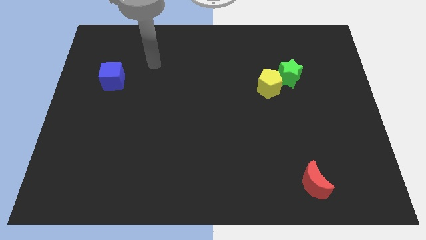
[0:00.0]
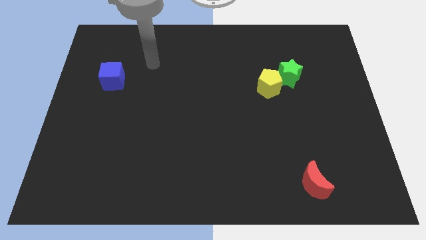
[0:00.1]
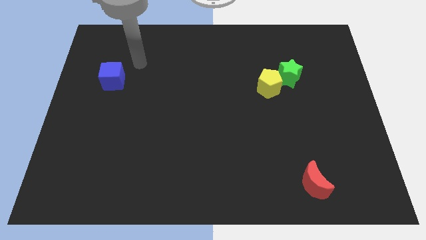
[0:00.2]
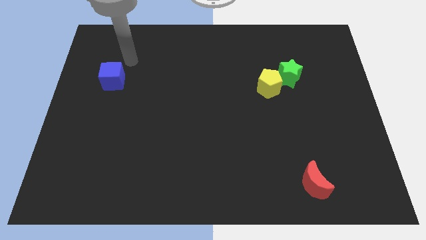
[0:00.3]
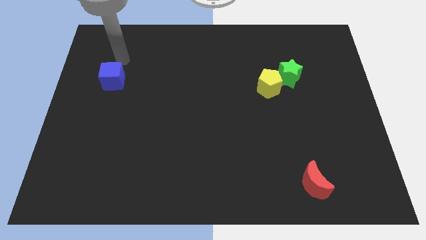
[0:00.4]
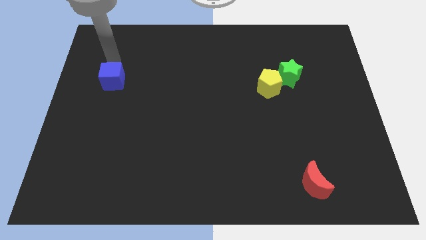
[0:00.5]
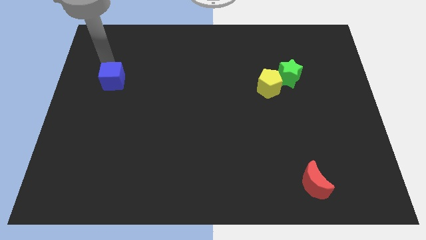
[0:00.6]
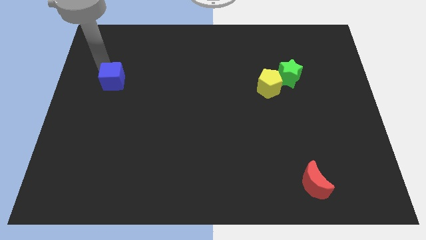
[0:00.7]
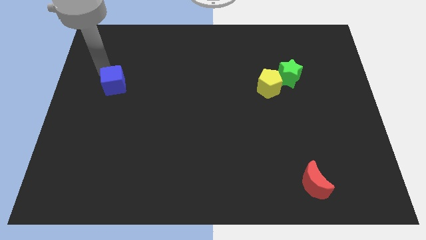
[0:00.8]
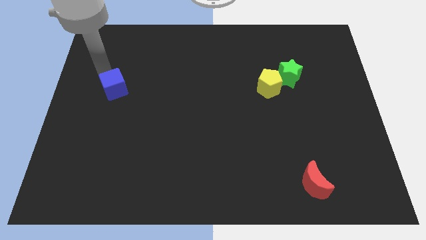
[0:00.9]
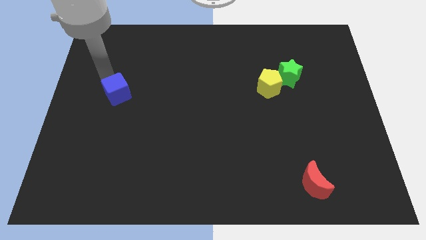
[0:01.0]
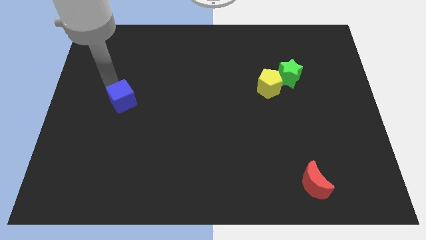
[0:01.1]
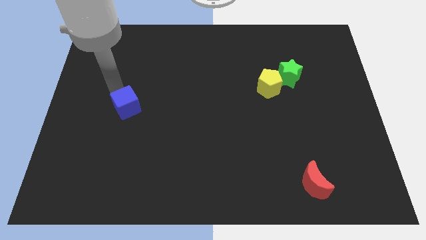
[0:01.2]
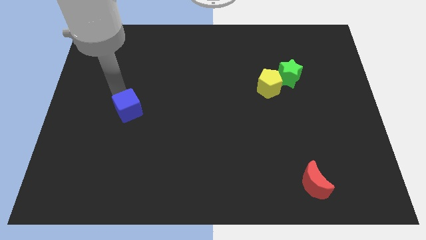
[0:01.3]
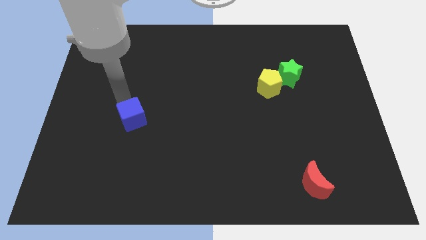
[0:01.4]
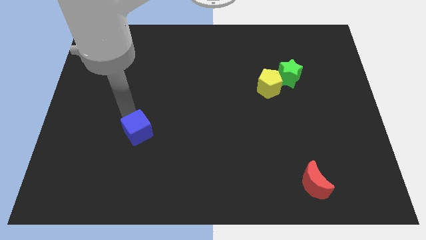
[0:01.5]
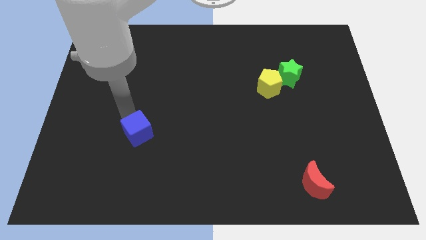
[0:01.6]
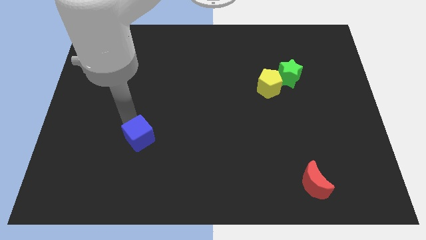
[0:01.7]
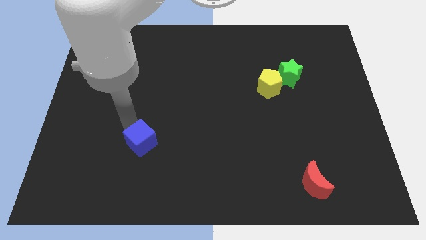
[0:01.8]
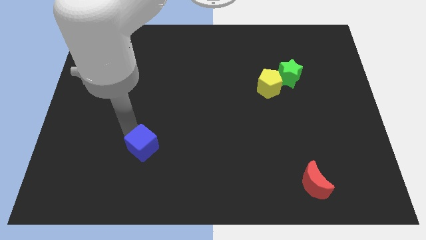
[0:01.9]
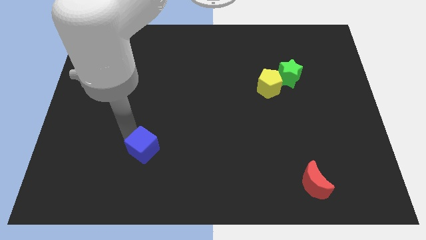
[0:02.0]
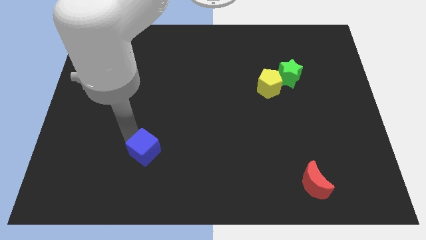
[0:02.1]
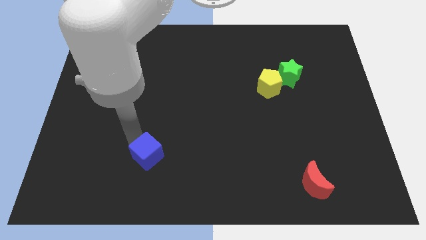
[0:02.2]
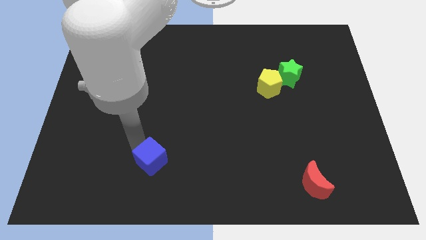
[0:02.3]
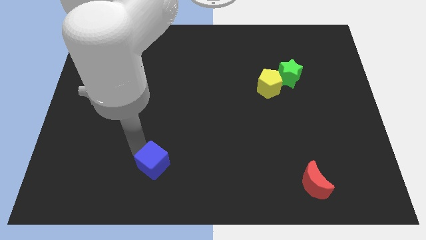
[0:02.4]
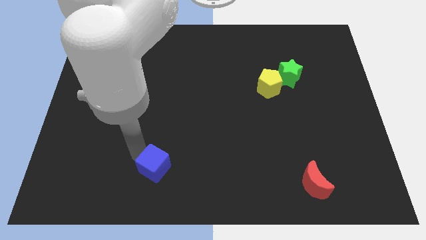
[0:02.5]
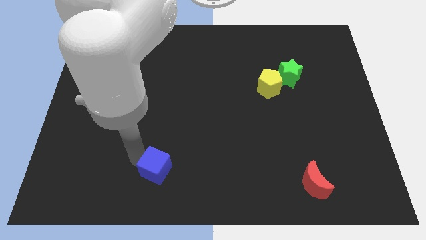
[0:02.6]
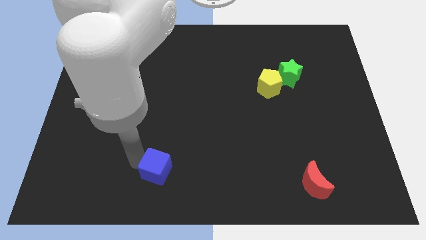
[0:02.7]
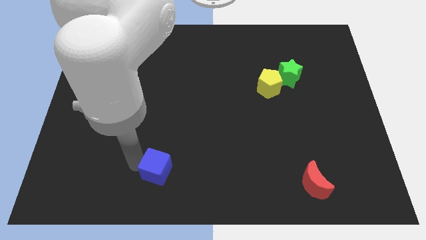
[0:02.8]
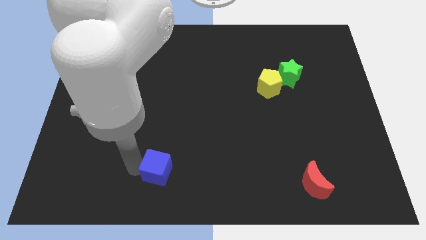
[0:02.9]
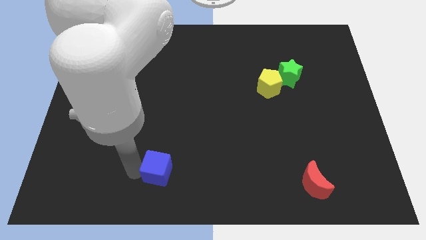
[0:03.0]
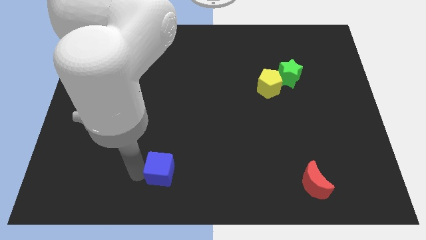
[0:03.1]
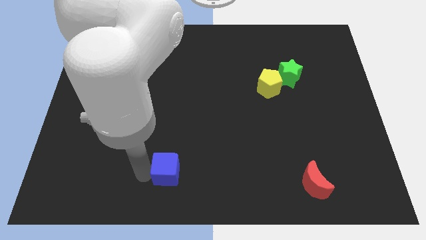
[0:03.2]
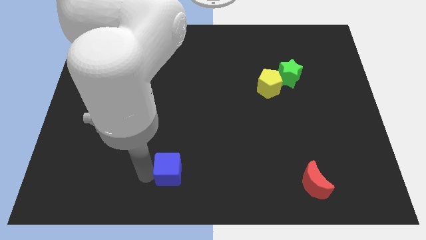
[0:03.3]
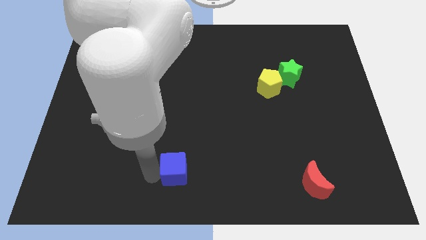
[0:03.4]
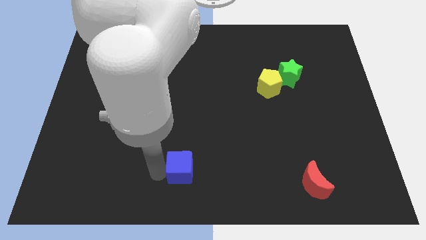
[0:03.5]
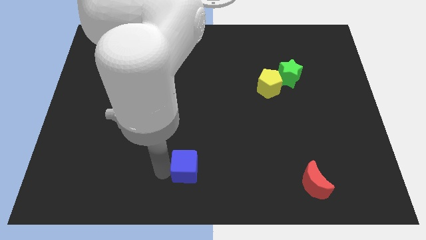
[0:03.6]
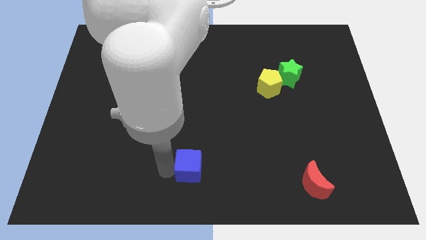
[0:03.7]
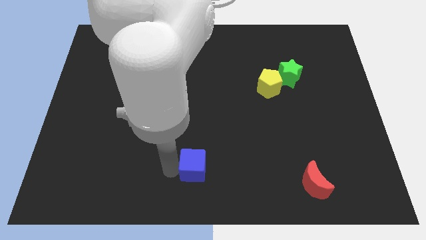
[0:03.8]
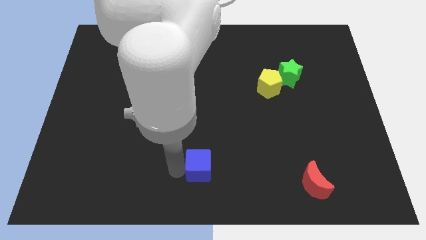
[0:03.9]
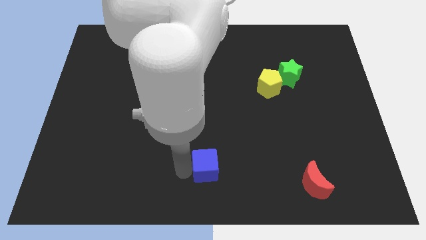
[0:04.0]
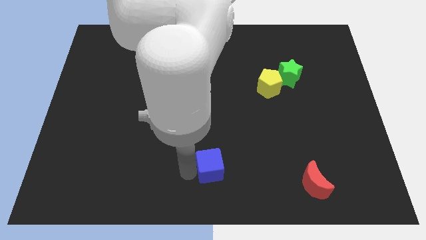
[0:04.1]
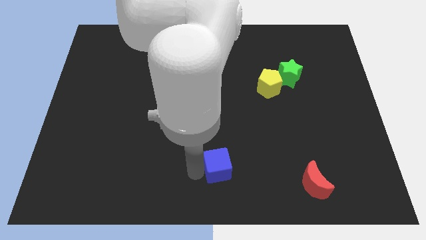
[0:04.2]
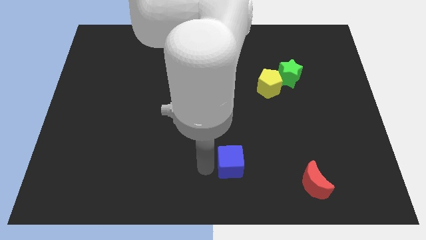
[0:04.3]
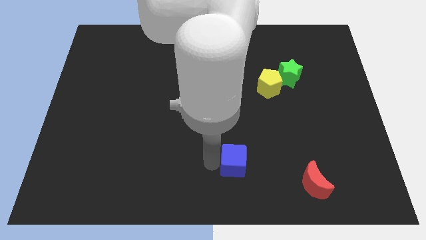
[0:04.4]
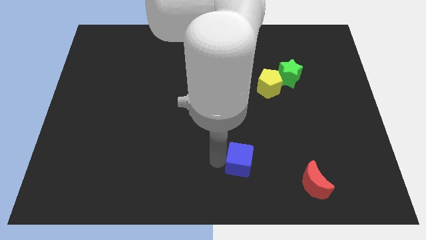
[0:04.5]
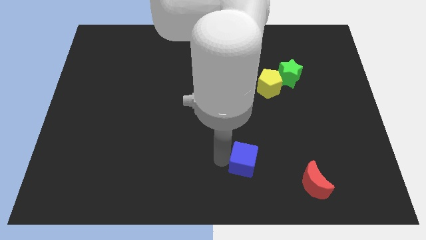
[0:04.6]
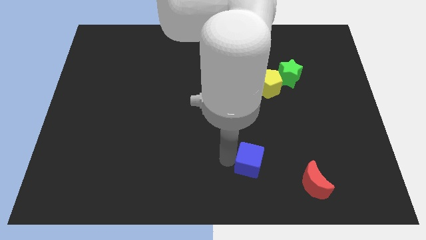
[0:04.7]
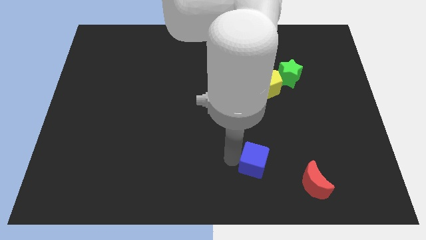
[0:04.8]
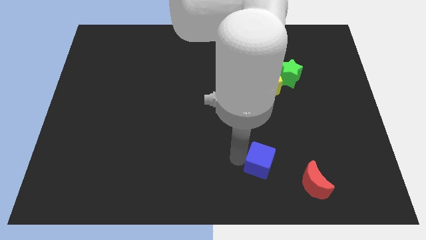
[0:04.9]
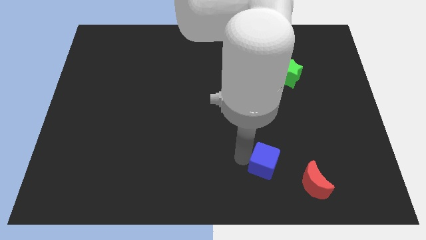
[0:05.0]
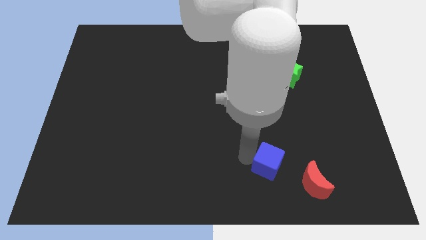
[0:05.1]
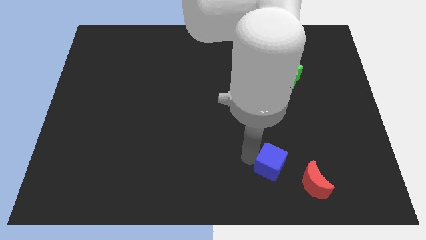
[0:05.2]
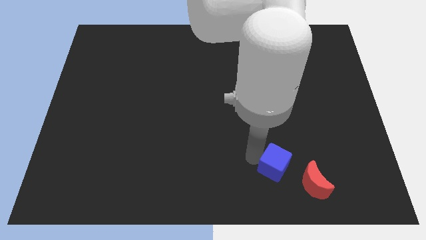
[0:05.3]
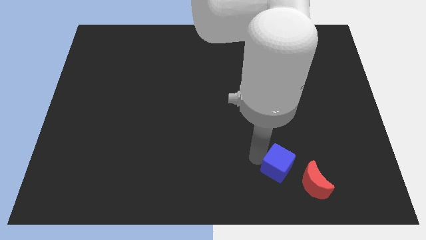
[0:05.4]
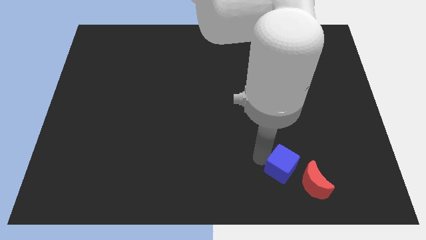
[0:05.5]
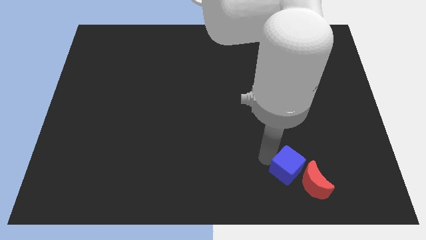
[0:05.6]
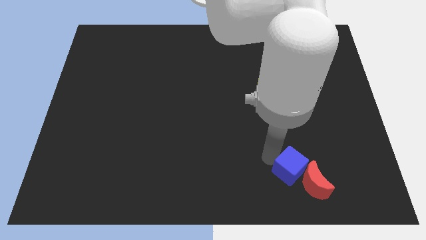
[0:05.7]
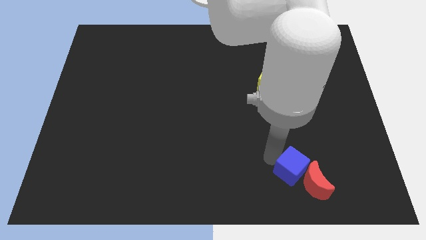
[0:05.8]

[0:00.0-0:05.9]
put the cube next to the red block

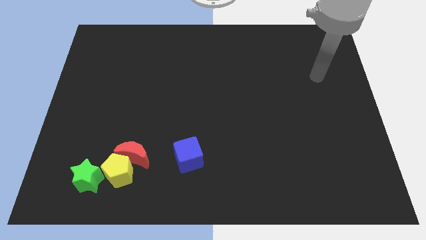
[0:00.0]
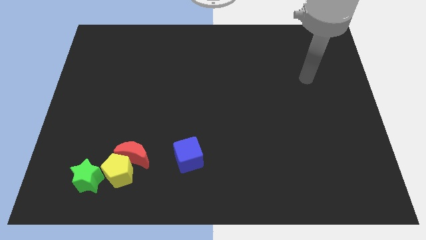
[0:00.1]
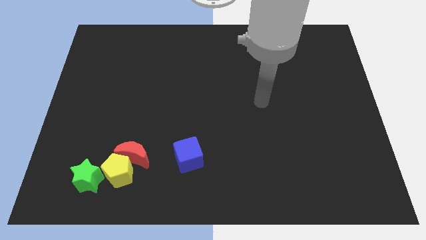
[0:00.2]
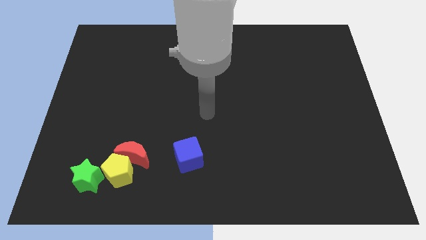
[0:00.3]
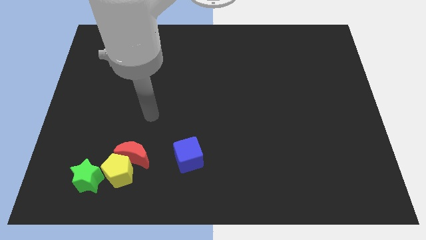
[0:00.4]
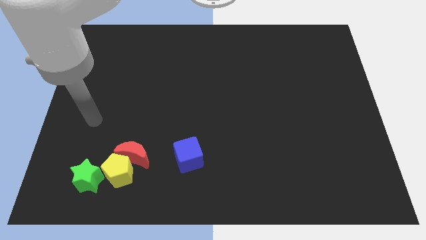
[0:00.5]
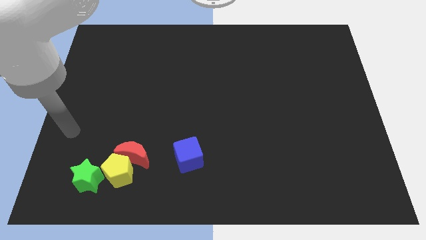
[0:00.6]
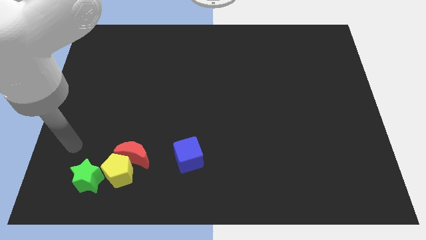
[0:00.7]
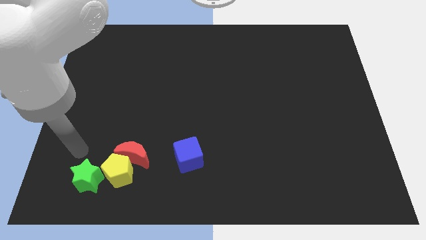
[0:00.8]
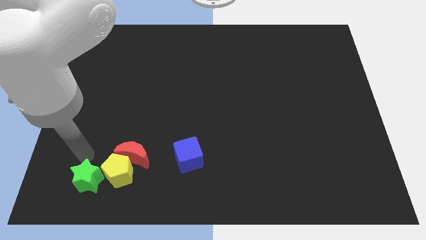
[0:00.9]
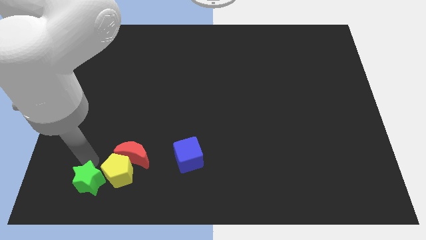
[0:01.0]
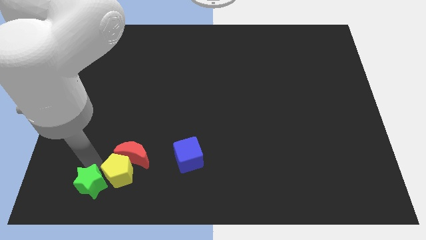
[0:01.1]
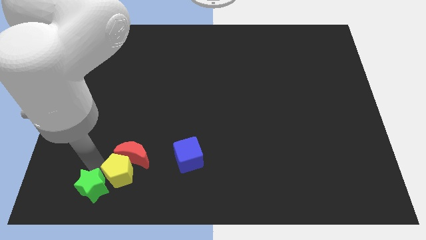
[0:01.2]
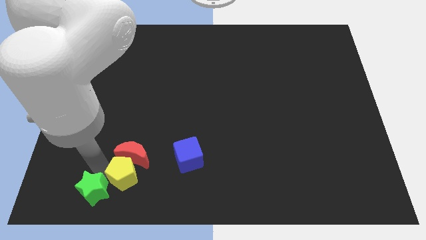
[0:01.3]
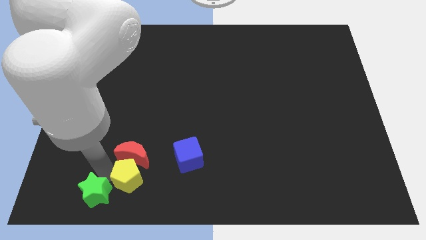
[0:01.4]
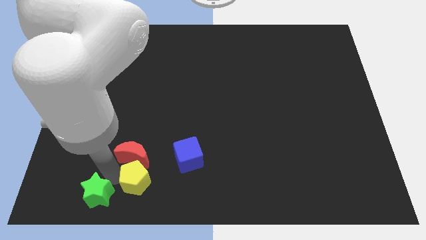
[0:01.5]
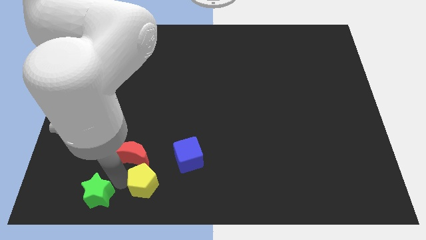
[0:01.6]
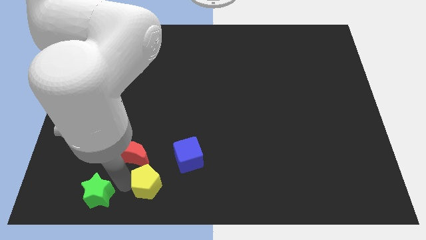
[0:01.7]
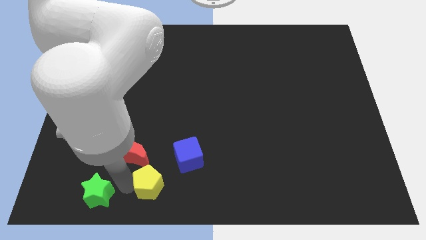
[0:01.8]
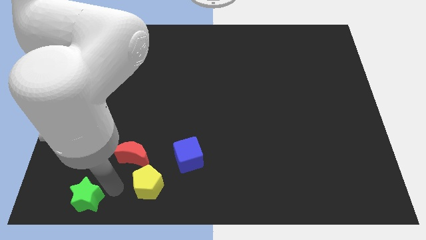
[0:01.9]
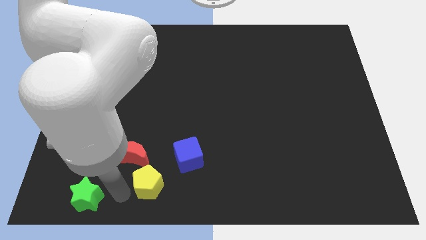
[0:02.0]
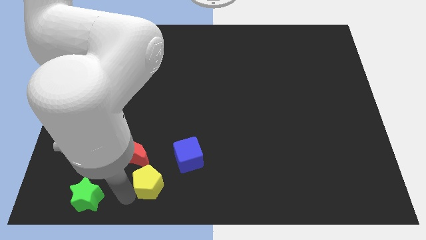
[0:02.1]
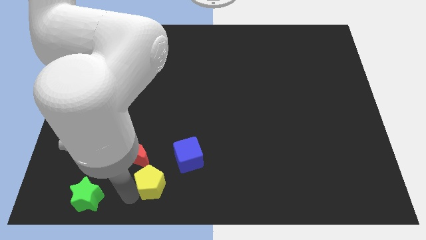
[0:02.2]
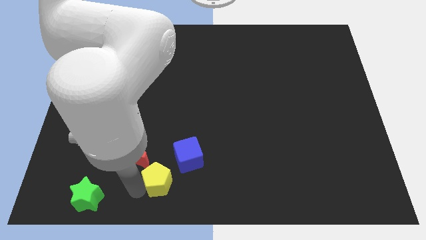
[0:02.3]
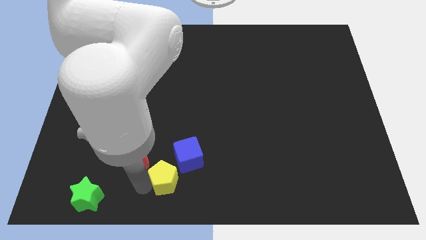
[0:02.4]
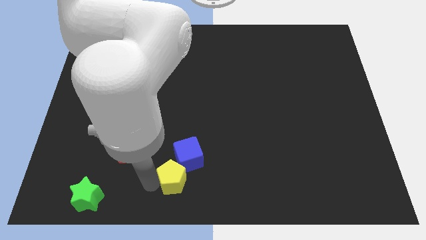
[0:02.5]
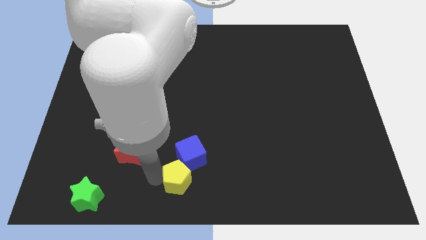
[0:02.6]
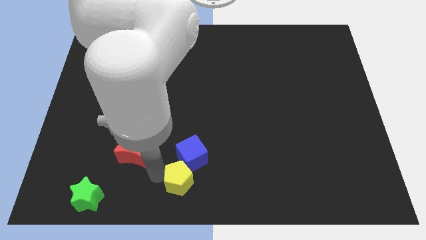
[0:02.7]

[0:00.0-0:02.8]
put the yellow pentagon towards the cube
